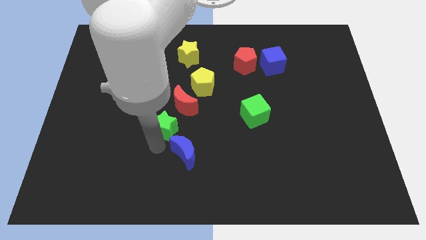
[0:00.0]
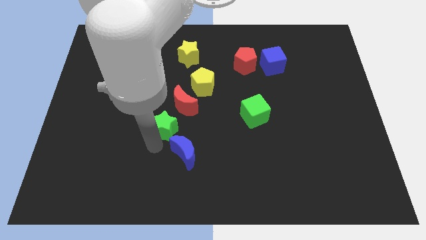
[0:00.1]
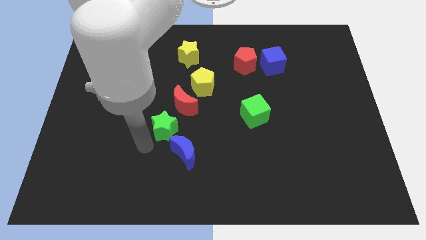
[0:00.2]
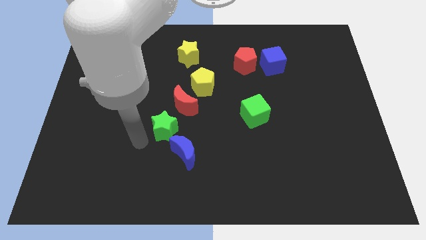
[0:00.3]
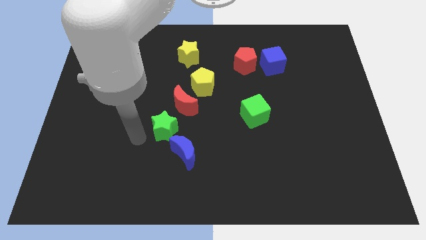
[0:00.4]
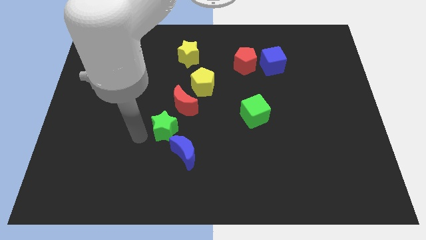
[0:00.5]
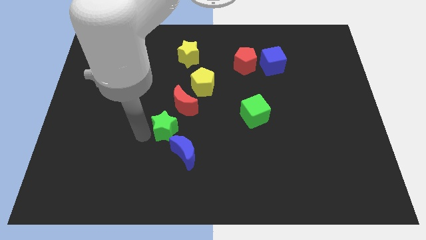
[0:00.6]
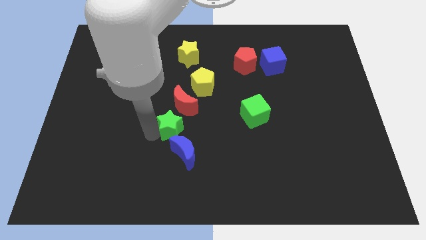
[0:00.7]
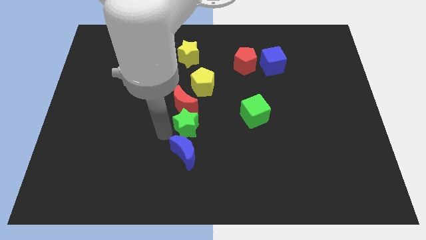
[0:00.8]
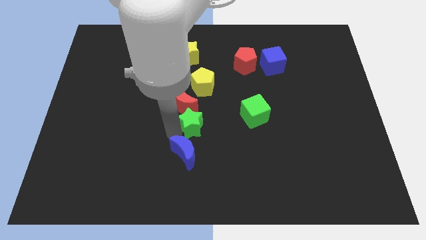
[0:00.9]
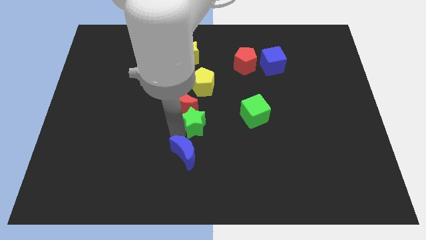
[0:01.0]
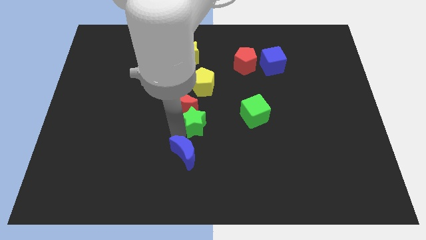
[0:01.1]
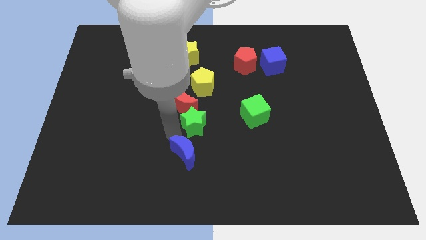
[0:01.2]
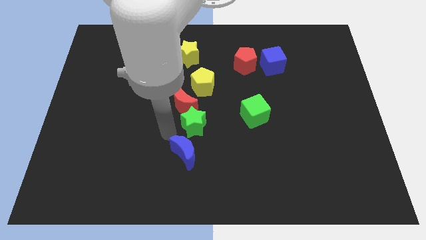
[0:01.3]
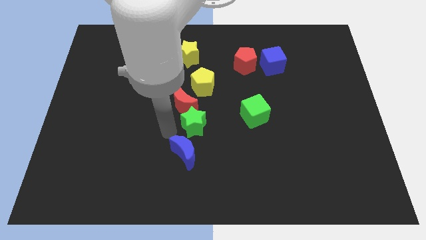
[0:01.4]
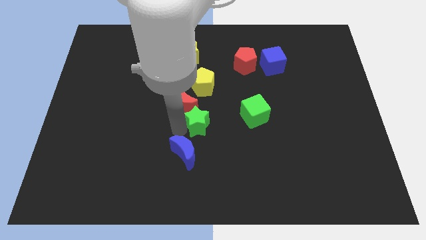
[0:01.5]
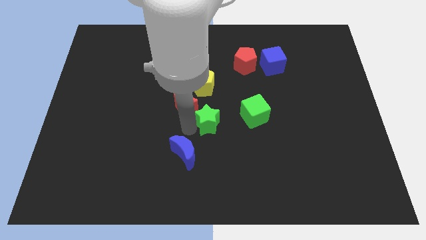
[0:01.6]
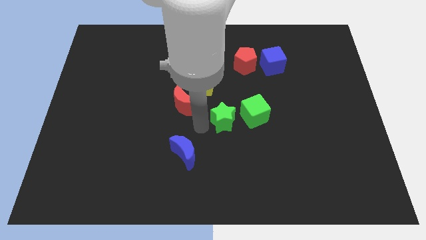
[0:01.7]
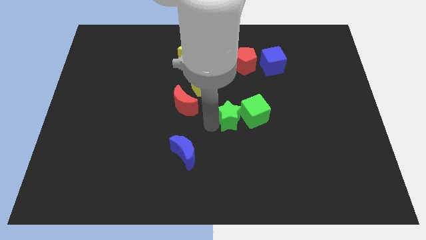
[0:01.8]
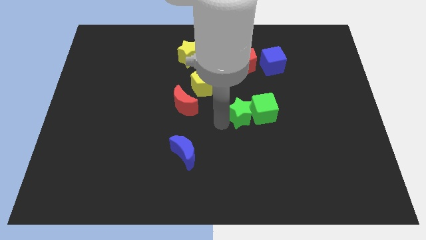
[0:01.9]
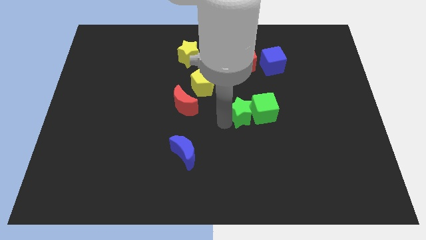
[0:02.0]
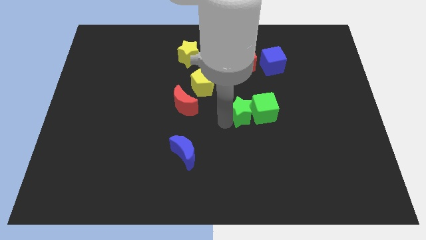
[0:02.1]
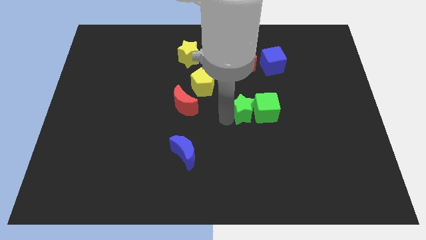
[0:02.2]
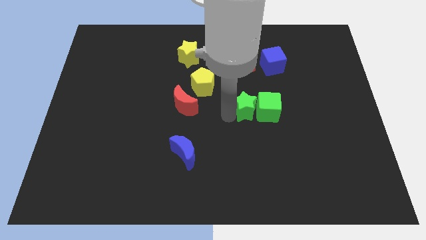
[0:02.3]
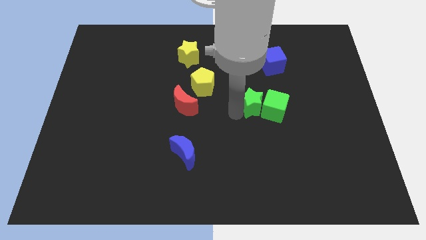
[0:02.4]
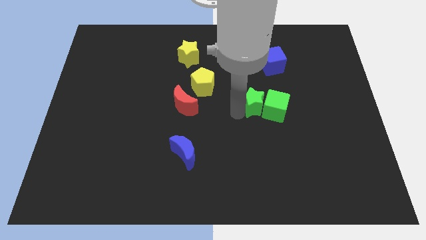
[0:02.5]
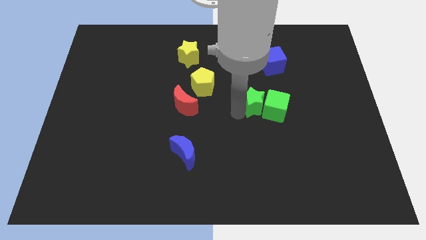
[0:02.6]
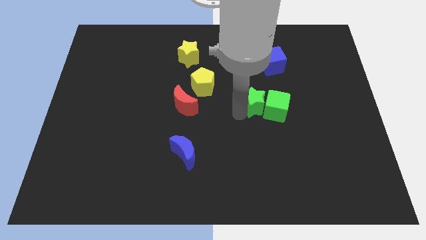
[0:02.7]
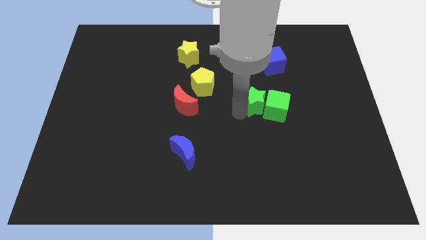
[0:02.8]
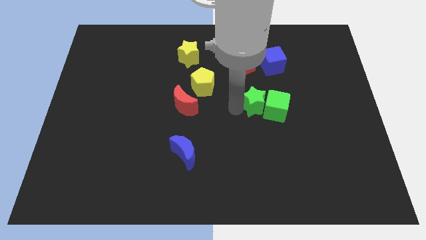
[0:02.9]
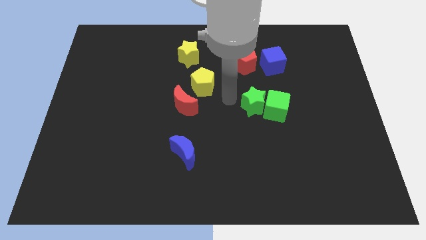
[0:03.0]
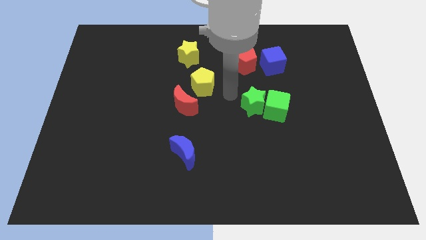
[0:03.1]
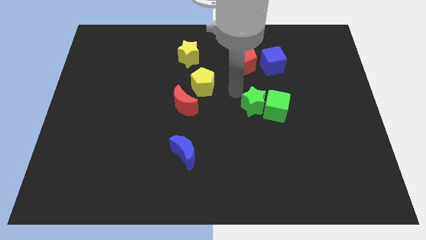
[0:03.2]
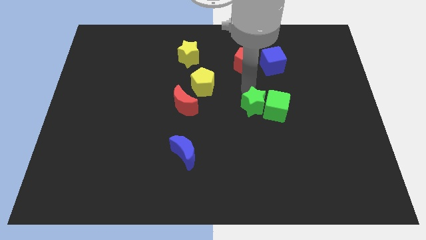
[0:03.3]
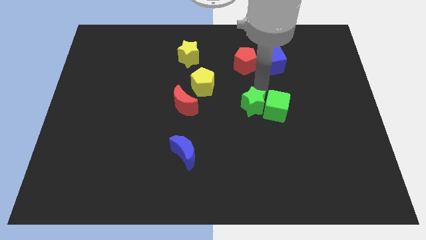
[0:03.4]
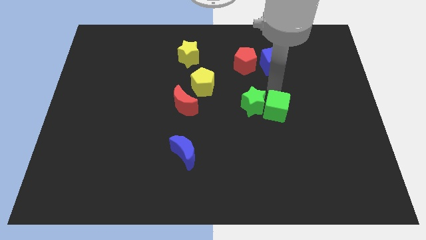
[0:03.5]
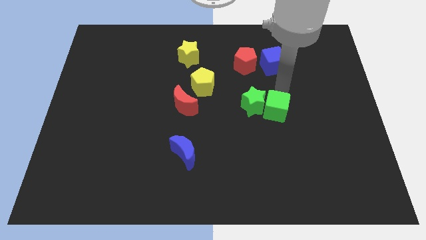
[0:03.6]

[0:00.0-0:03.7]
push the green star diagonal to the bottom right of the yellow pentagon

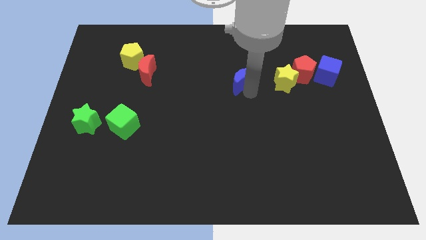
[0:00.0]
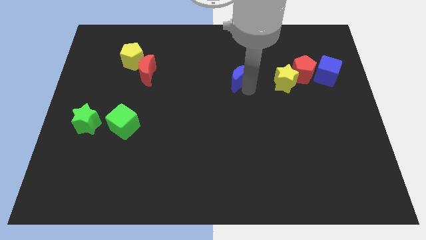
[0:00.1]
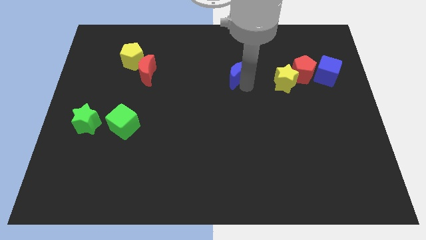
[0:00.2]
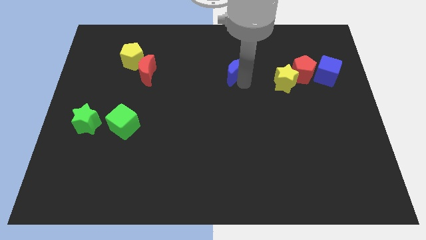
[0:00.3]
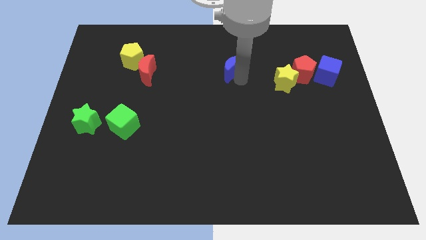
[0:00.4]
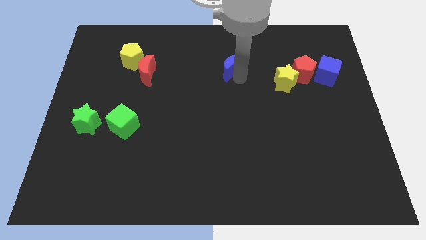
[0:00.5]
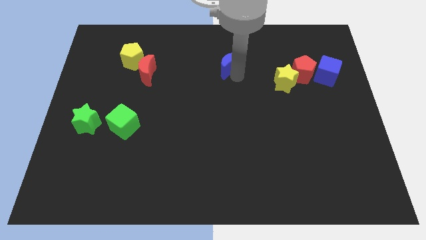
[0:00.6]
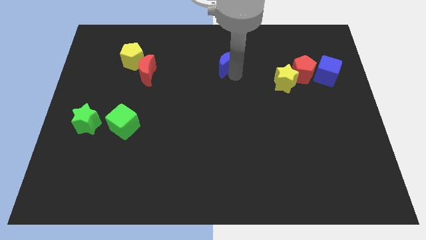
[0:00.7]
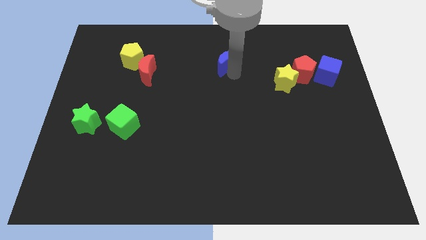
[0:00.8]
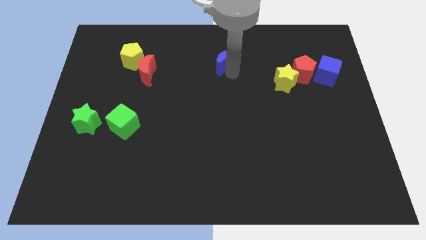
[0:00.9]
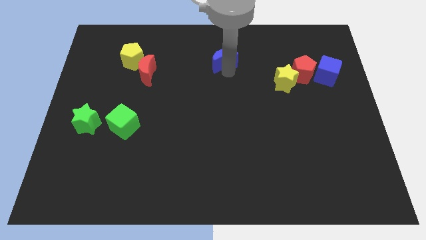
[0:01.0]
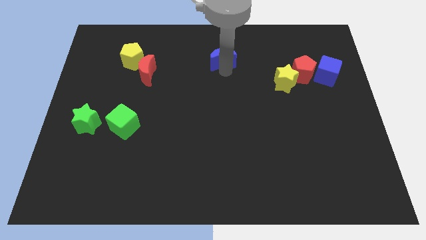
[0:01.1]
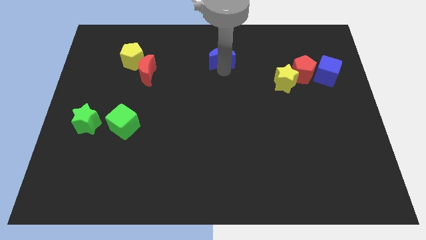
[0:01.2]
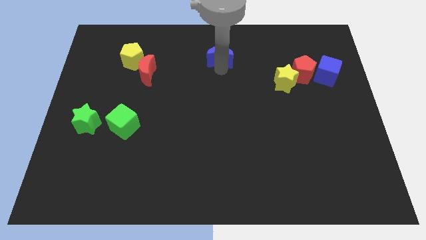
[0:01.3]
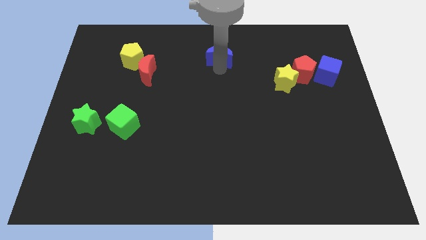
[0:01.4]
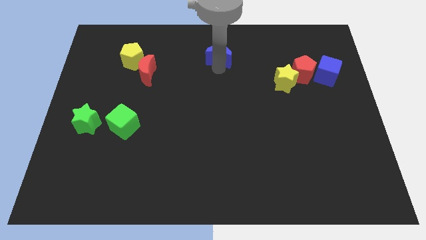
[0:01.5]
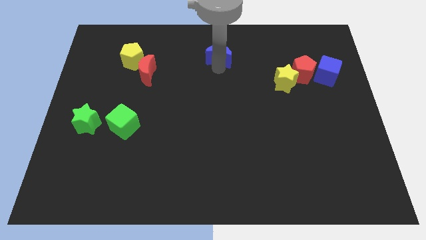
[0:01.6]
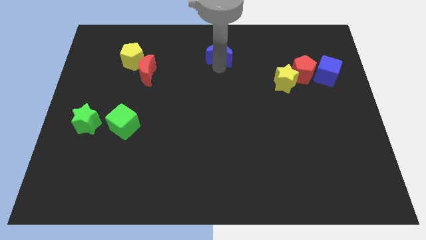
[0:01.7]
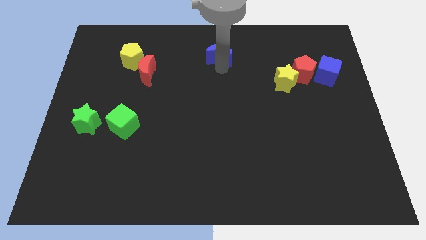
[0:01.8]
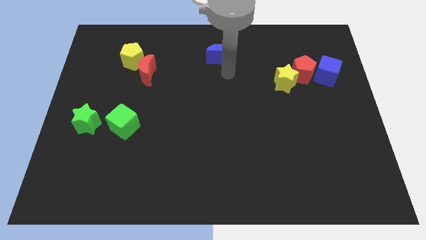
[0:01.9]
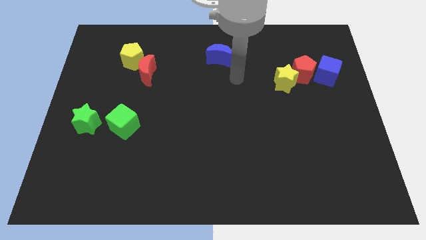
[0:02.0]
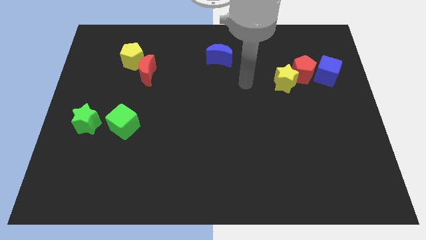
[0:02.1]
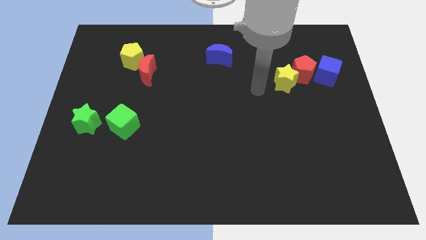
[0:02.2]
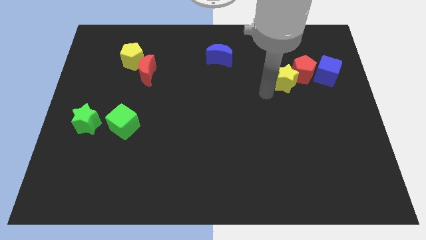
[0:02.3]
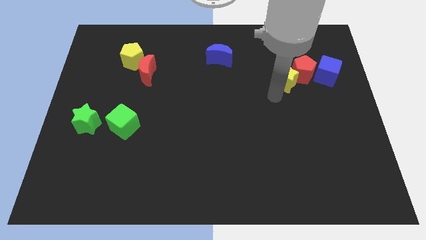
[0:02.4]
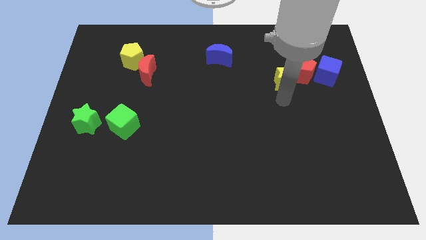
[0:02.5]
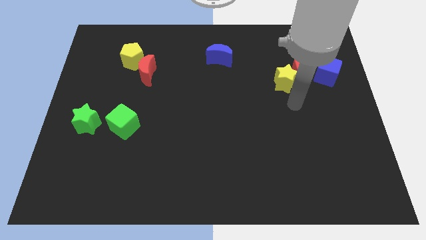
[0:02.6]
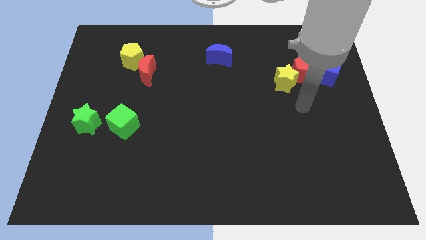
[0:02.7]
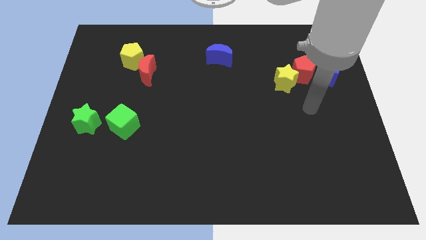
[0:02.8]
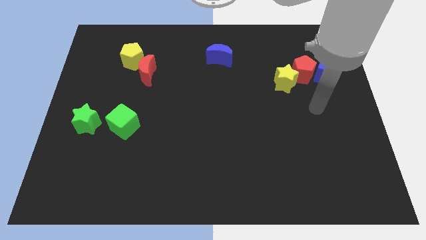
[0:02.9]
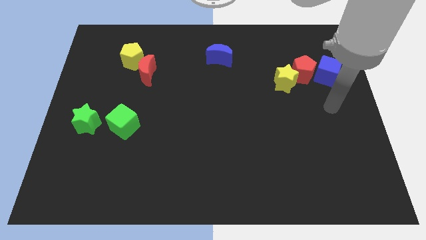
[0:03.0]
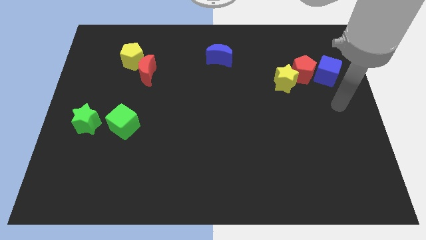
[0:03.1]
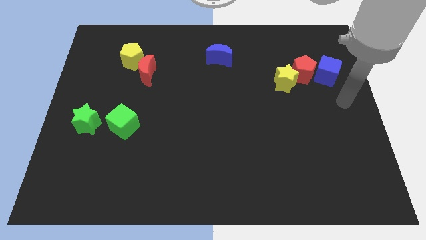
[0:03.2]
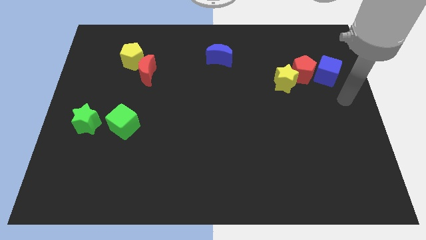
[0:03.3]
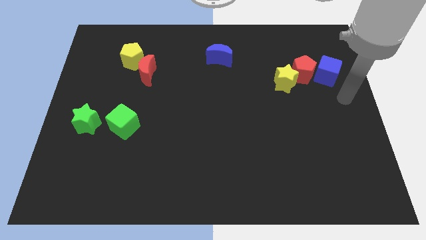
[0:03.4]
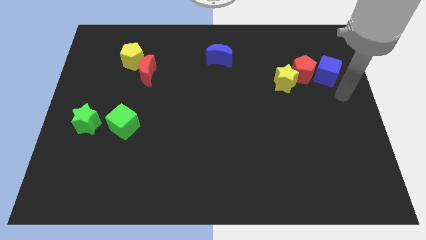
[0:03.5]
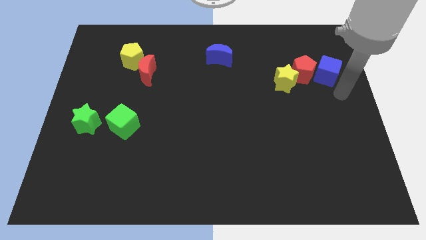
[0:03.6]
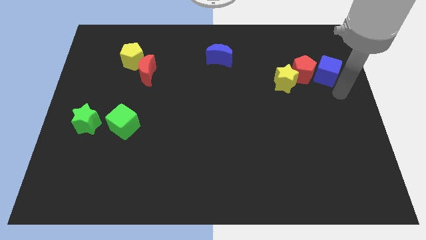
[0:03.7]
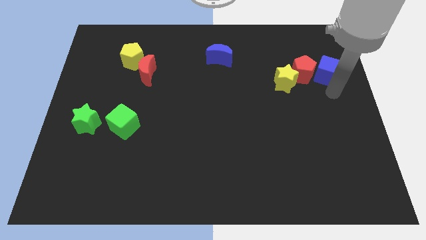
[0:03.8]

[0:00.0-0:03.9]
push the blue crescent to the top side of the board

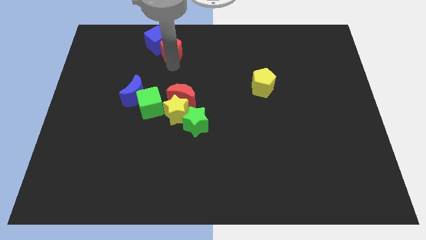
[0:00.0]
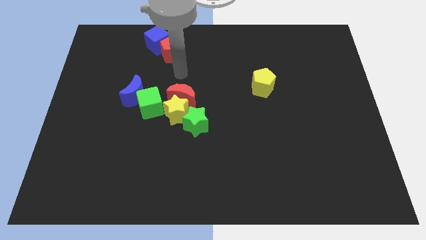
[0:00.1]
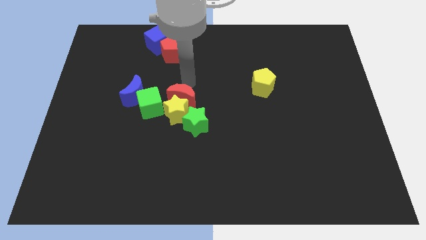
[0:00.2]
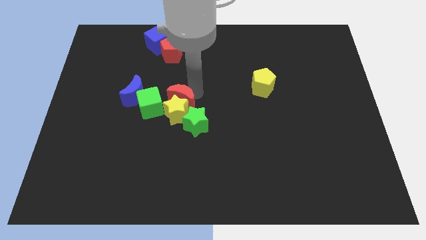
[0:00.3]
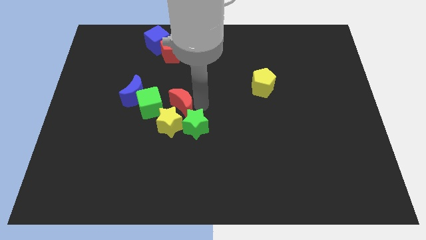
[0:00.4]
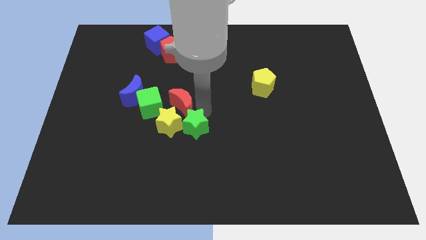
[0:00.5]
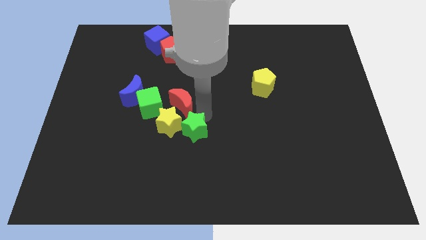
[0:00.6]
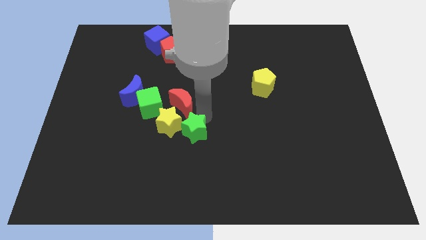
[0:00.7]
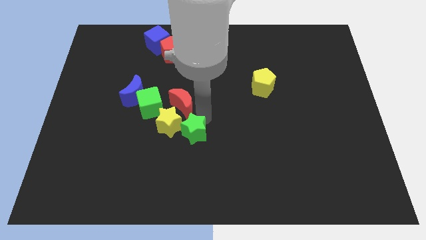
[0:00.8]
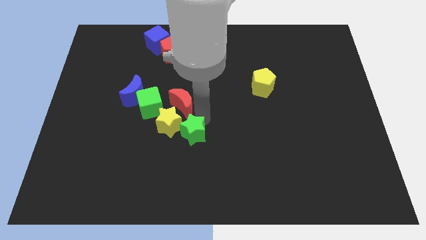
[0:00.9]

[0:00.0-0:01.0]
move the green star slightly to the bottom

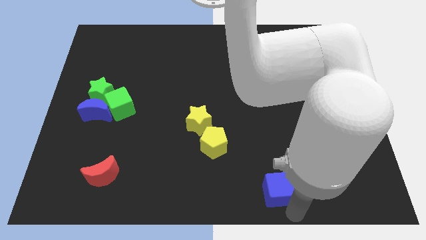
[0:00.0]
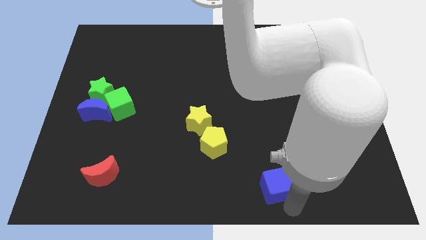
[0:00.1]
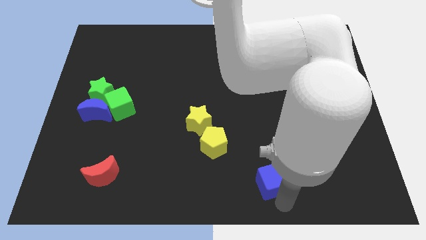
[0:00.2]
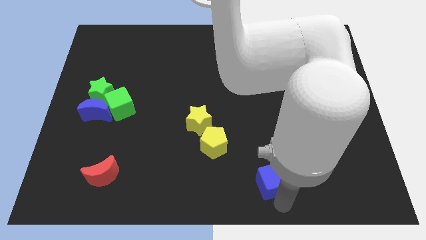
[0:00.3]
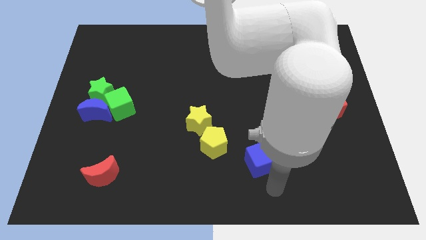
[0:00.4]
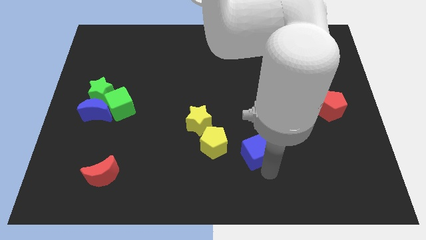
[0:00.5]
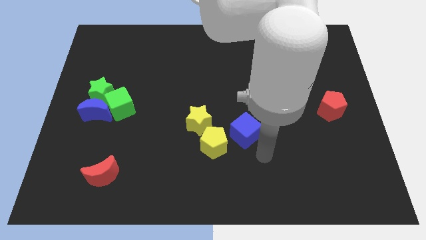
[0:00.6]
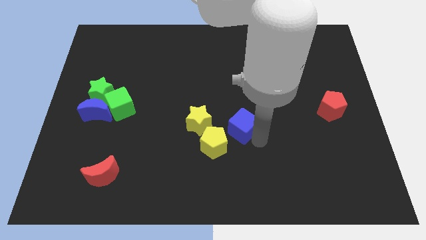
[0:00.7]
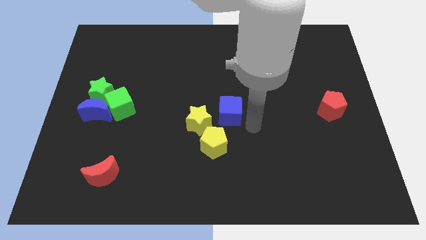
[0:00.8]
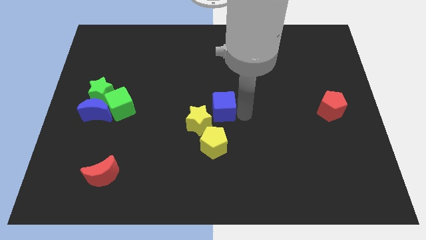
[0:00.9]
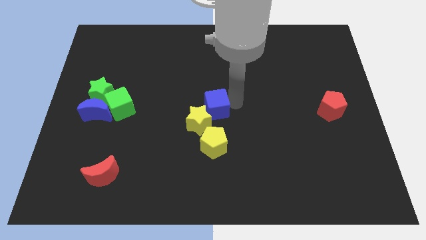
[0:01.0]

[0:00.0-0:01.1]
move blue cube to the center of the board
